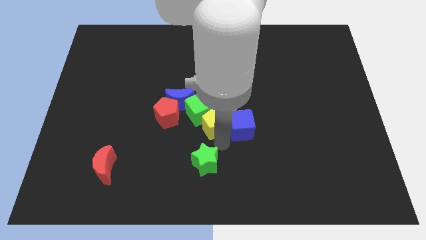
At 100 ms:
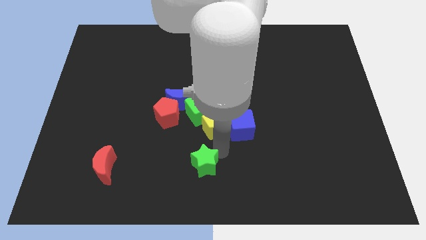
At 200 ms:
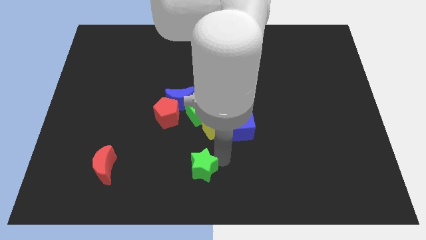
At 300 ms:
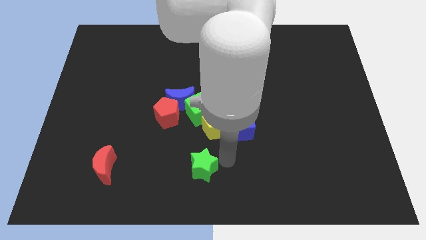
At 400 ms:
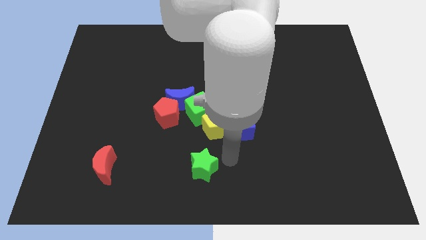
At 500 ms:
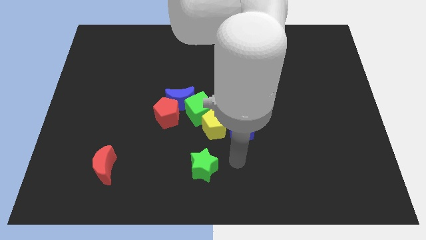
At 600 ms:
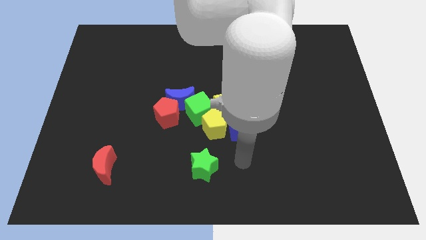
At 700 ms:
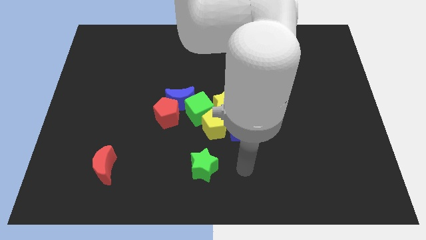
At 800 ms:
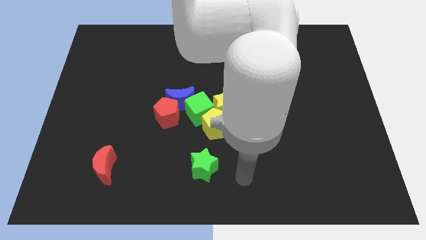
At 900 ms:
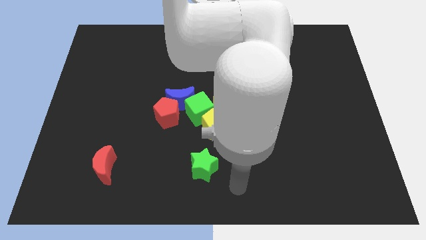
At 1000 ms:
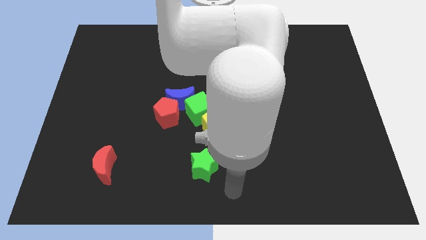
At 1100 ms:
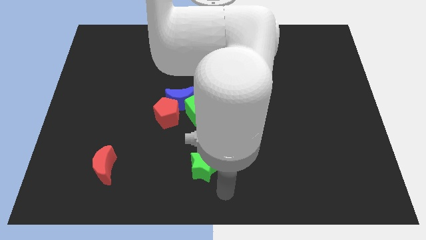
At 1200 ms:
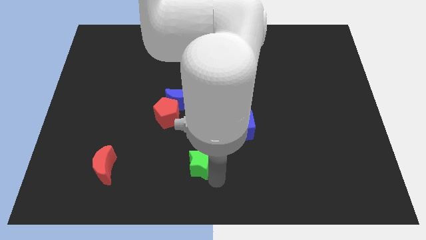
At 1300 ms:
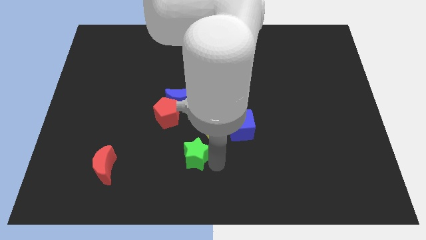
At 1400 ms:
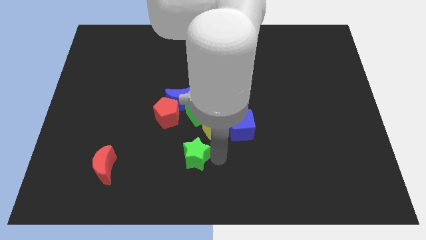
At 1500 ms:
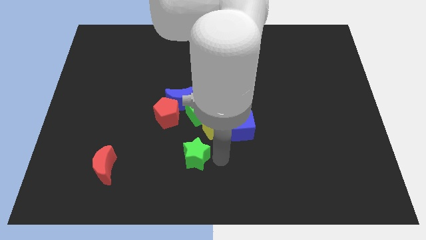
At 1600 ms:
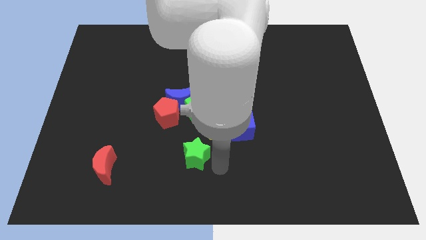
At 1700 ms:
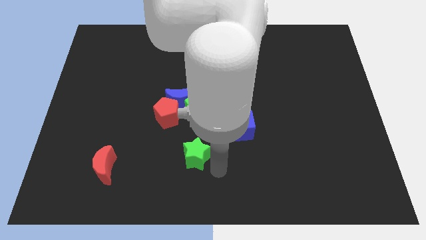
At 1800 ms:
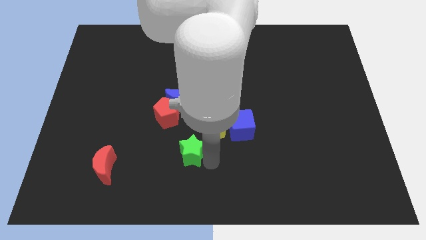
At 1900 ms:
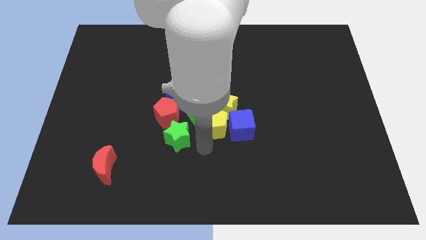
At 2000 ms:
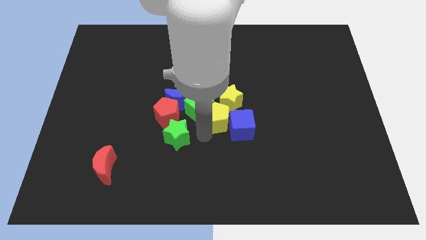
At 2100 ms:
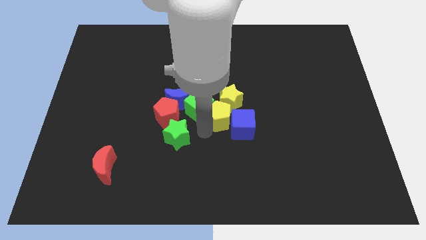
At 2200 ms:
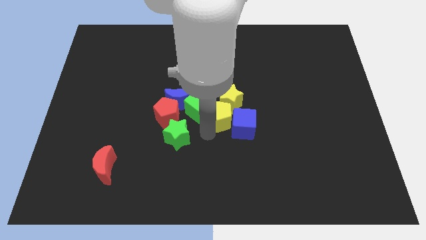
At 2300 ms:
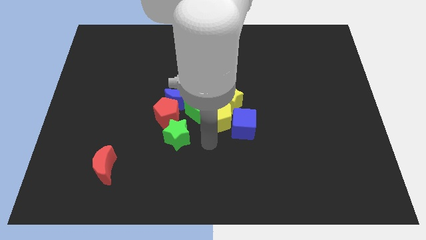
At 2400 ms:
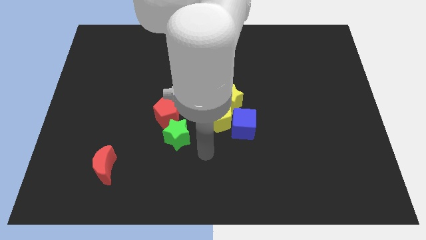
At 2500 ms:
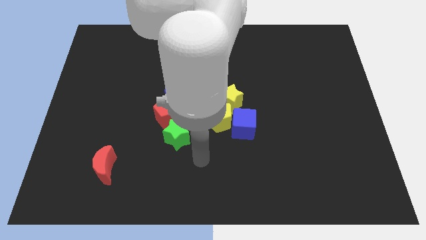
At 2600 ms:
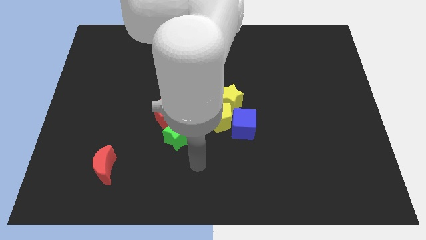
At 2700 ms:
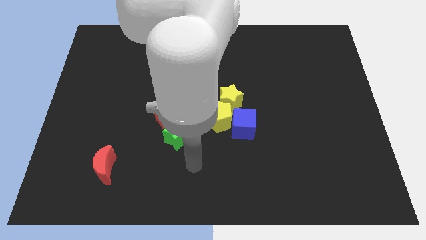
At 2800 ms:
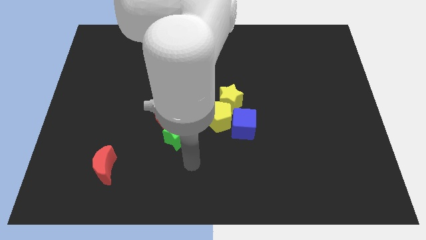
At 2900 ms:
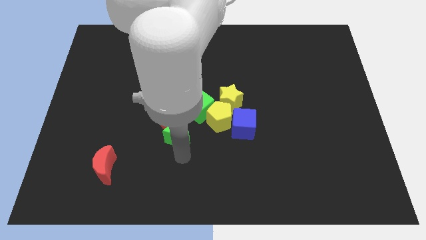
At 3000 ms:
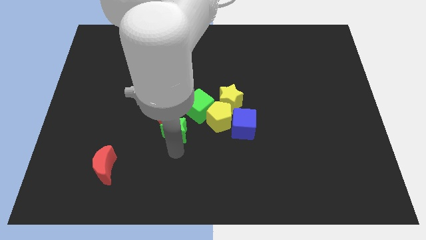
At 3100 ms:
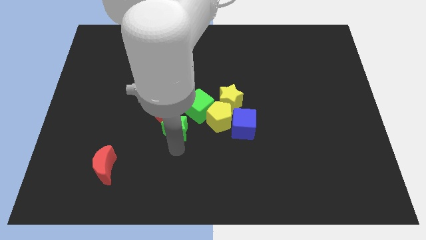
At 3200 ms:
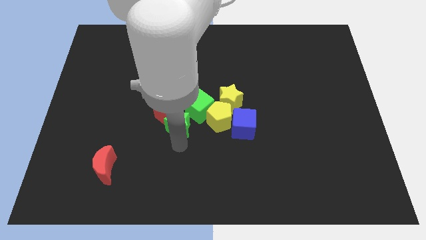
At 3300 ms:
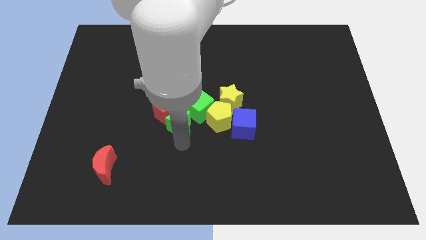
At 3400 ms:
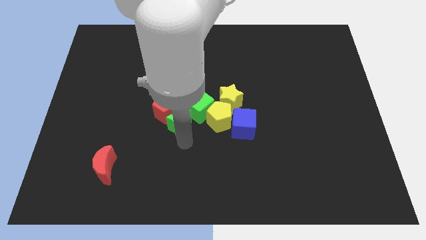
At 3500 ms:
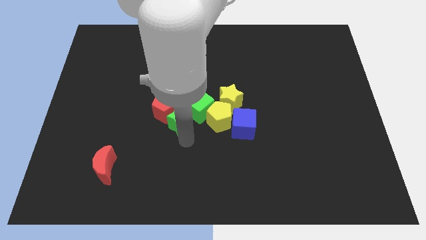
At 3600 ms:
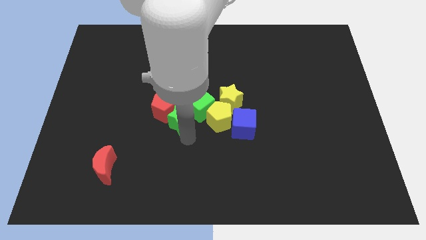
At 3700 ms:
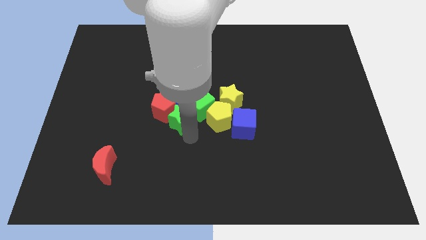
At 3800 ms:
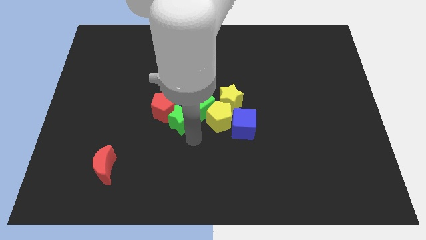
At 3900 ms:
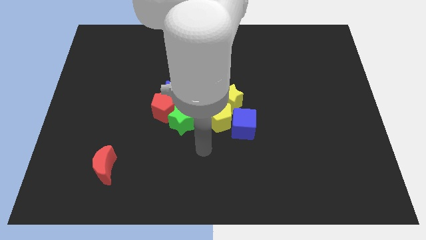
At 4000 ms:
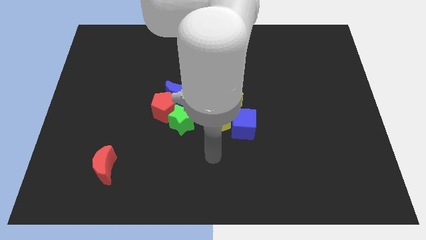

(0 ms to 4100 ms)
push the green star into the group of objects

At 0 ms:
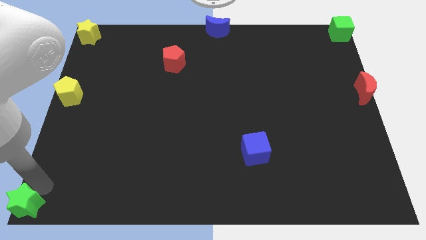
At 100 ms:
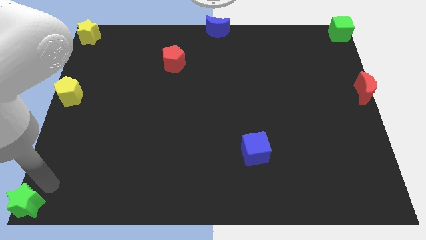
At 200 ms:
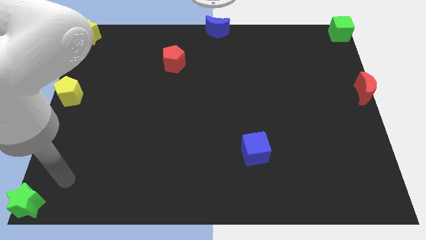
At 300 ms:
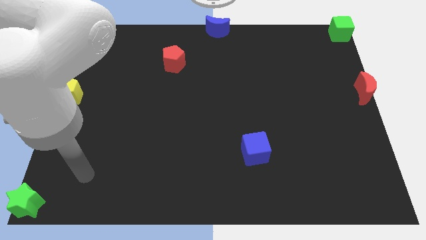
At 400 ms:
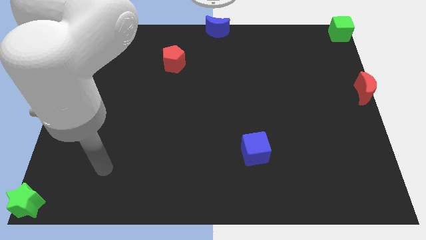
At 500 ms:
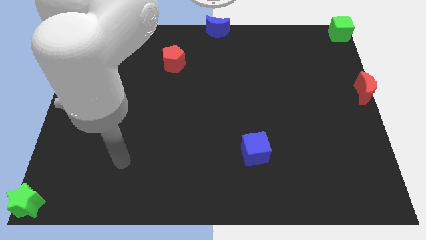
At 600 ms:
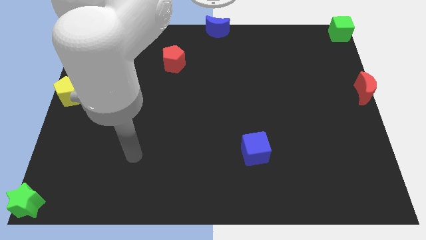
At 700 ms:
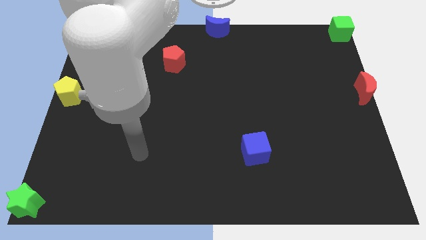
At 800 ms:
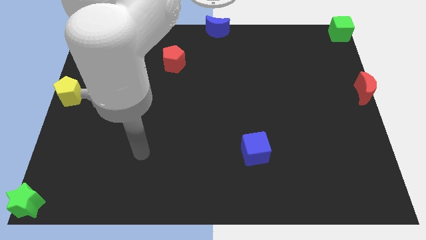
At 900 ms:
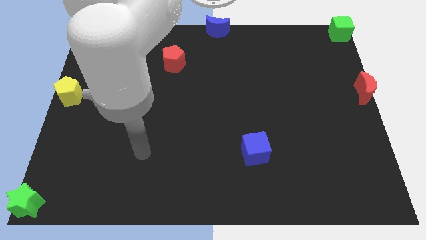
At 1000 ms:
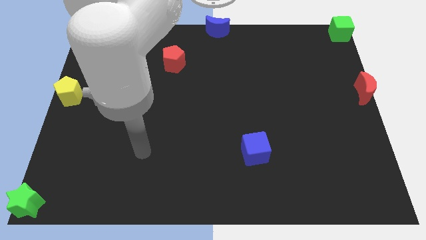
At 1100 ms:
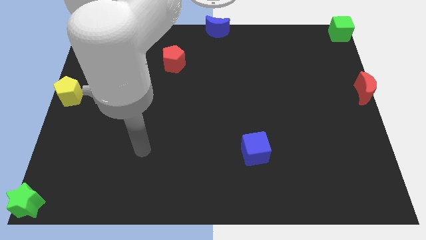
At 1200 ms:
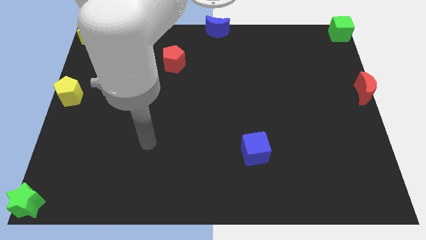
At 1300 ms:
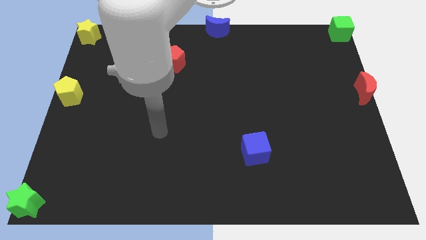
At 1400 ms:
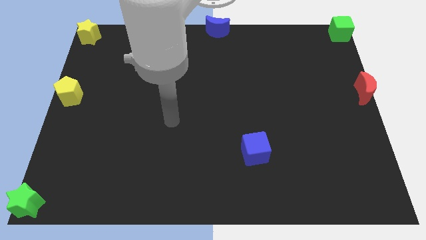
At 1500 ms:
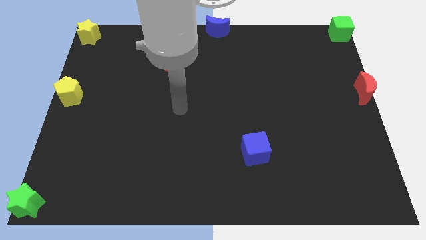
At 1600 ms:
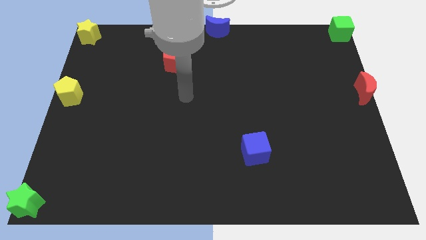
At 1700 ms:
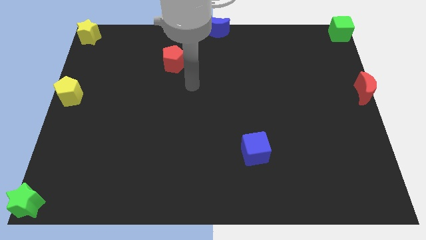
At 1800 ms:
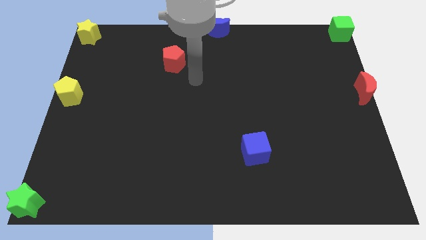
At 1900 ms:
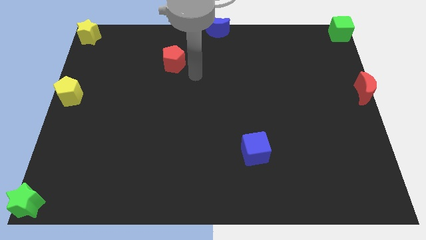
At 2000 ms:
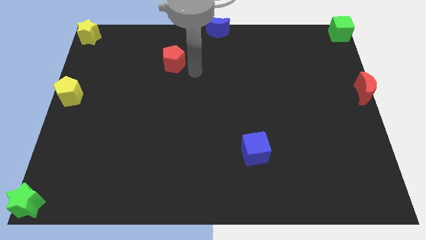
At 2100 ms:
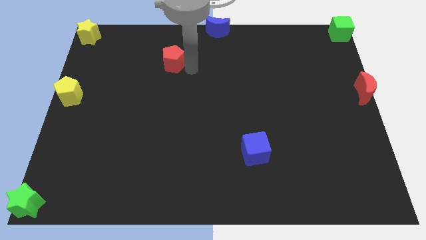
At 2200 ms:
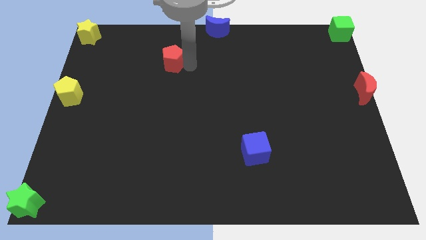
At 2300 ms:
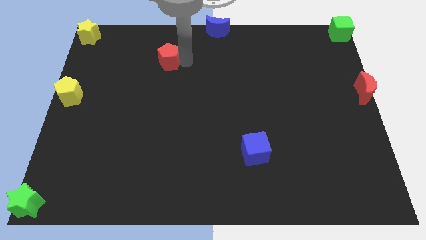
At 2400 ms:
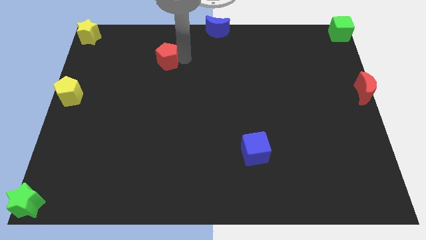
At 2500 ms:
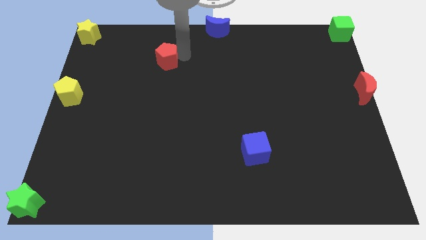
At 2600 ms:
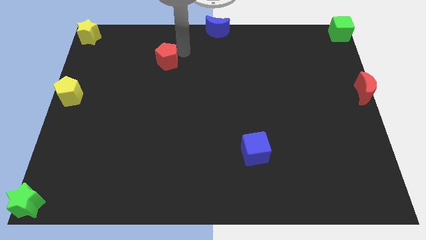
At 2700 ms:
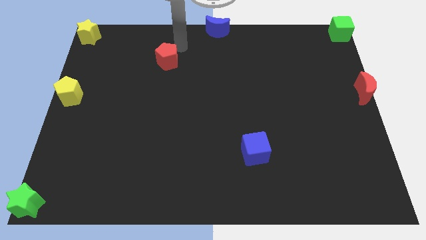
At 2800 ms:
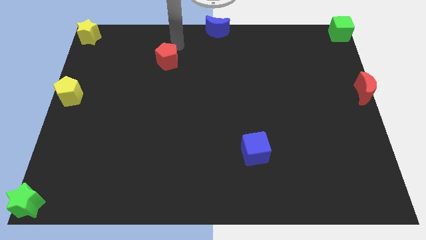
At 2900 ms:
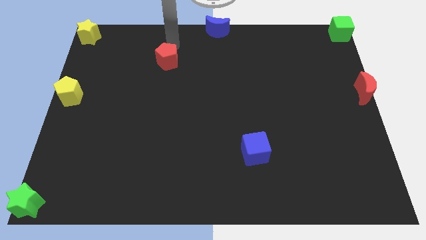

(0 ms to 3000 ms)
touch the red pentagon

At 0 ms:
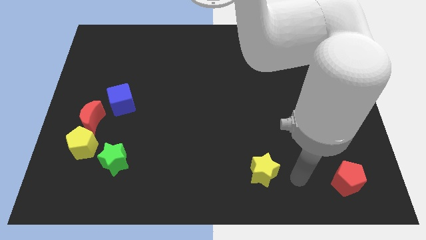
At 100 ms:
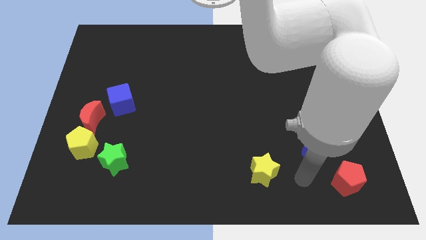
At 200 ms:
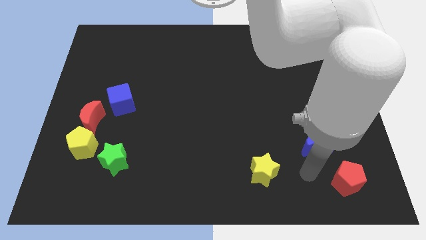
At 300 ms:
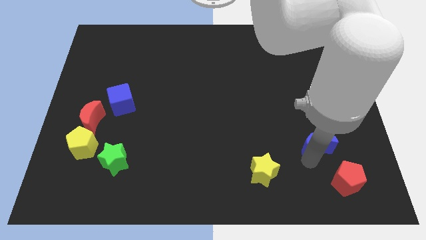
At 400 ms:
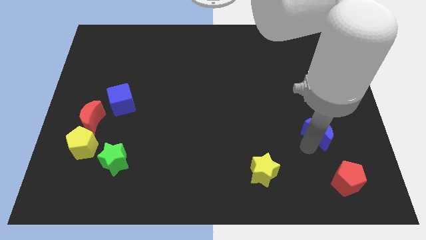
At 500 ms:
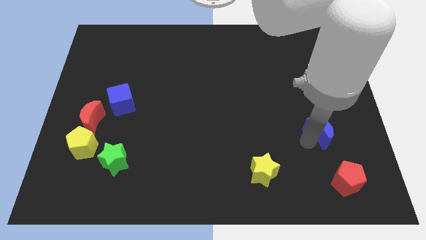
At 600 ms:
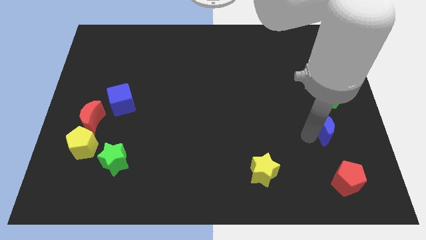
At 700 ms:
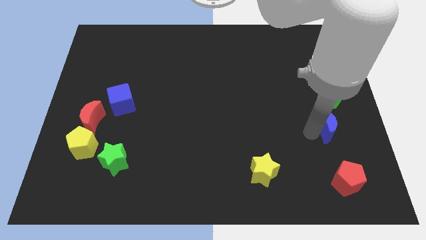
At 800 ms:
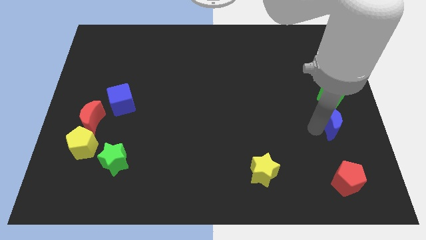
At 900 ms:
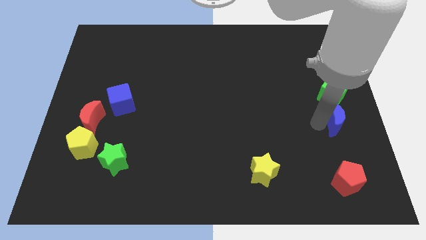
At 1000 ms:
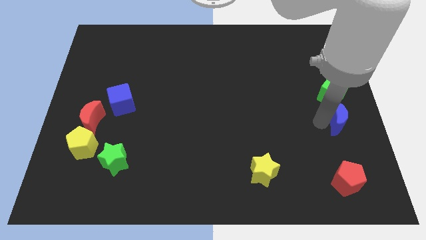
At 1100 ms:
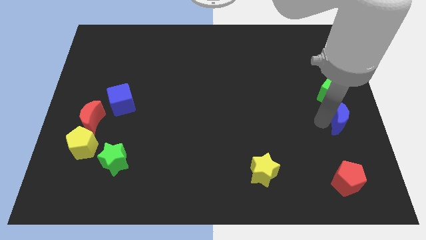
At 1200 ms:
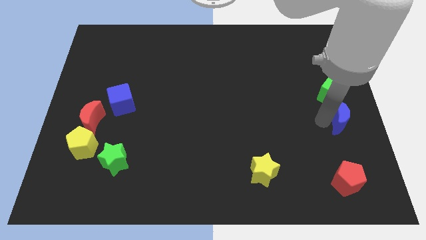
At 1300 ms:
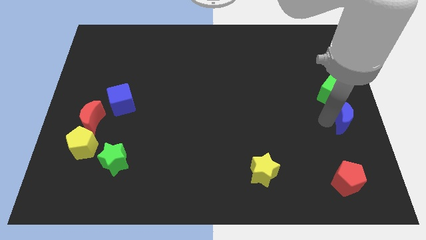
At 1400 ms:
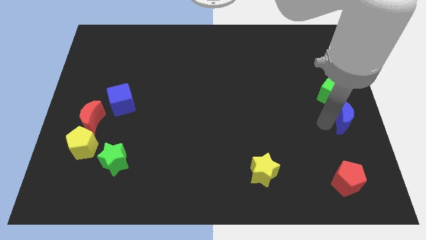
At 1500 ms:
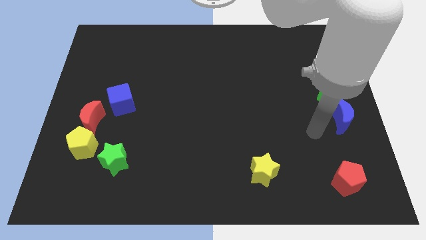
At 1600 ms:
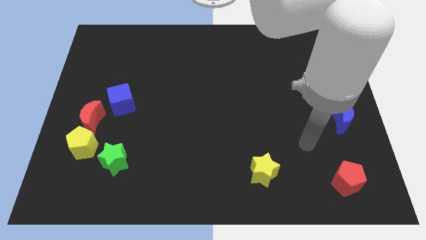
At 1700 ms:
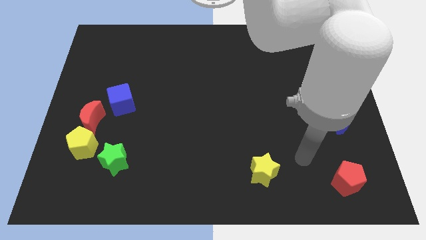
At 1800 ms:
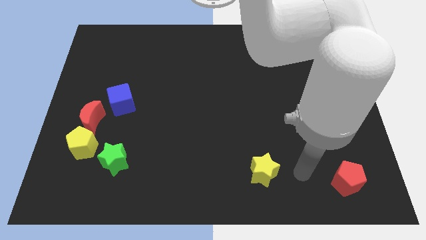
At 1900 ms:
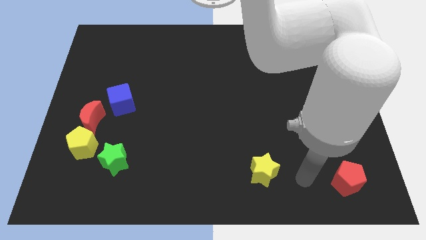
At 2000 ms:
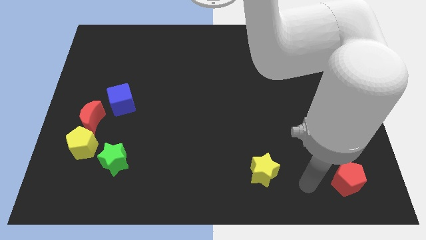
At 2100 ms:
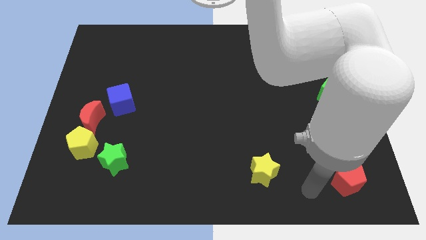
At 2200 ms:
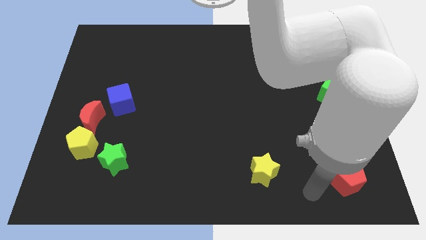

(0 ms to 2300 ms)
move the blue crescent bottom of green cube
